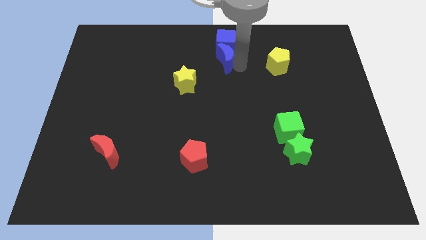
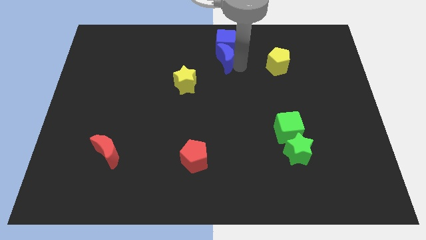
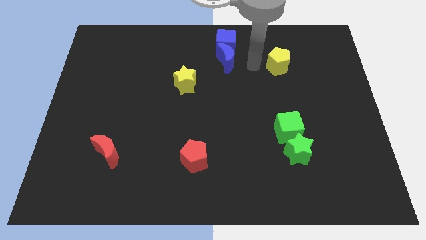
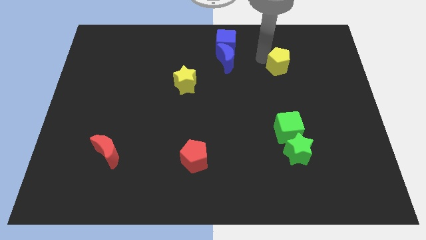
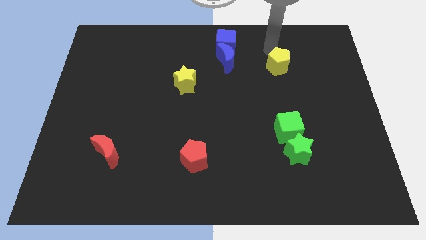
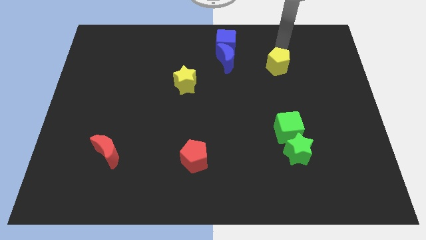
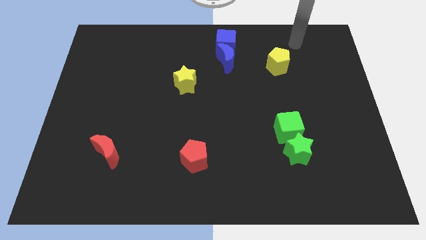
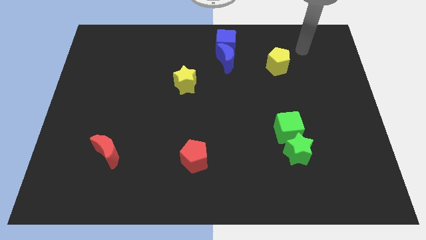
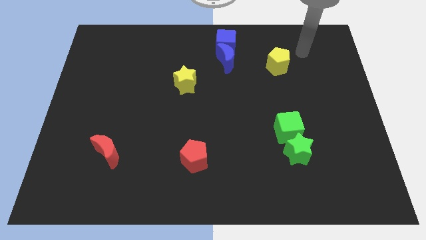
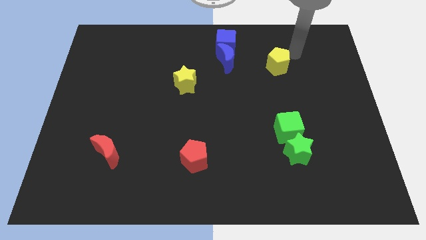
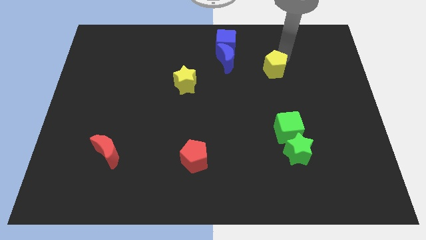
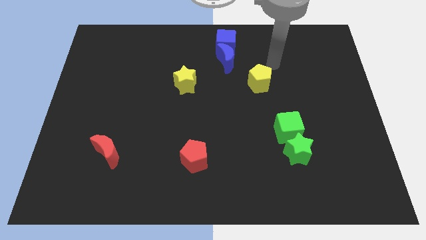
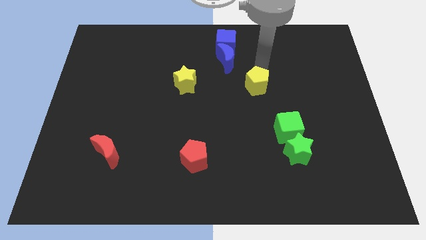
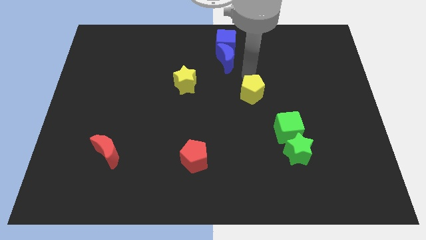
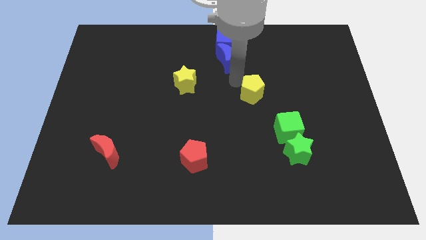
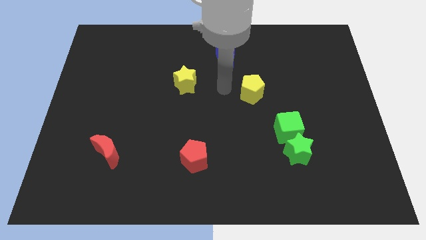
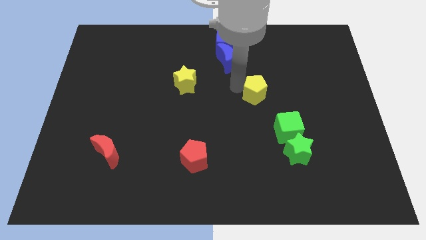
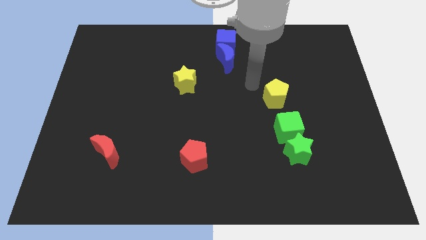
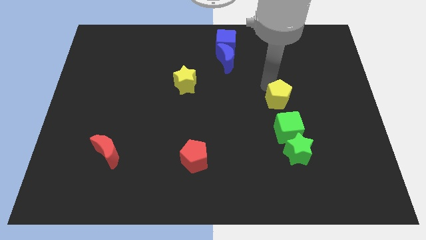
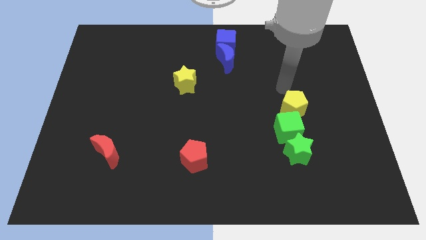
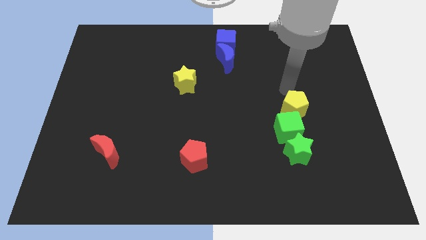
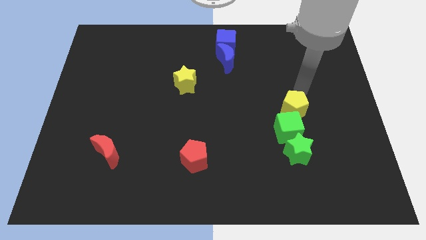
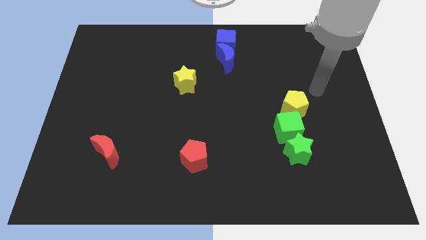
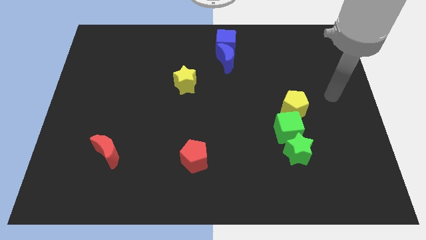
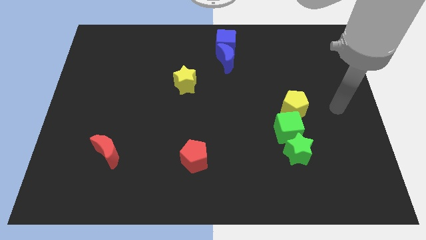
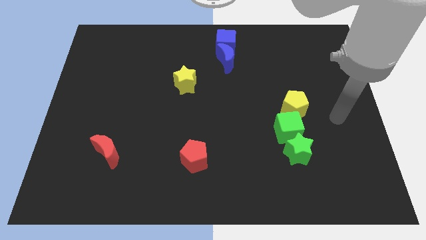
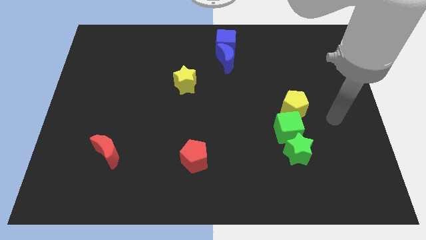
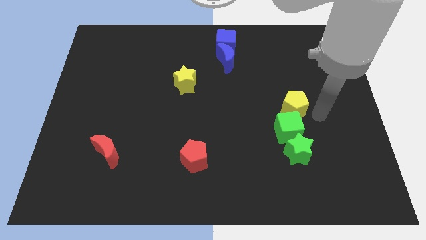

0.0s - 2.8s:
put the yellow pentagon at the top of the green cube

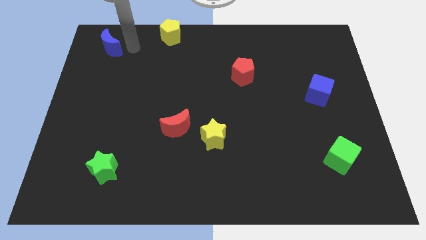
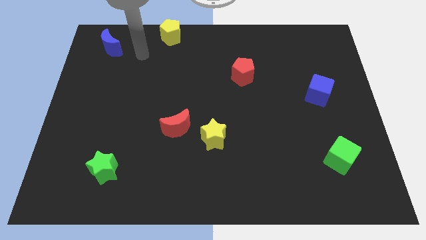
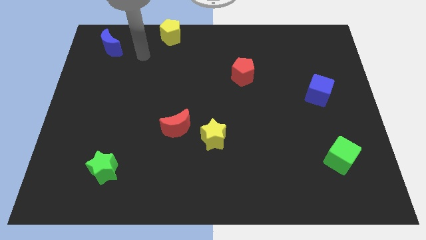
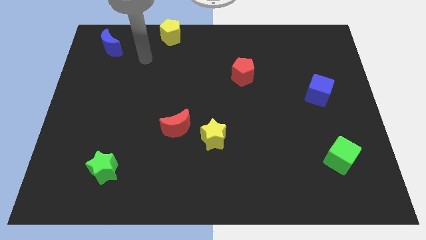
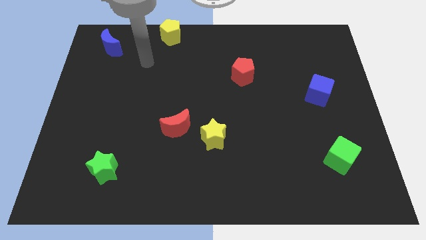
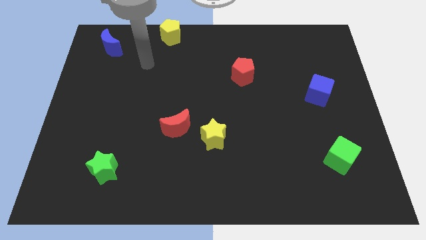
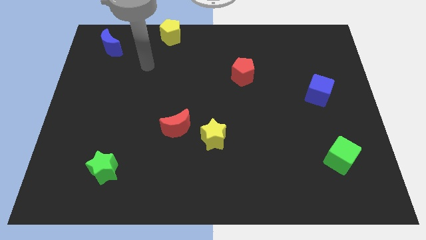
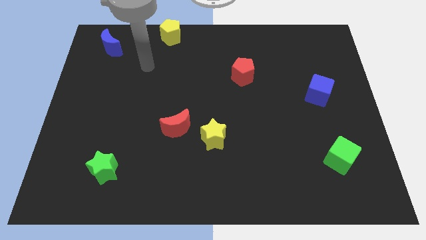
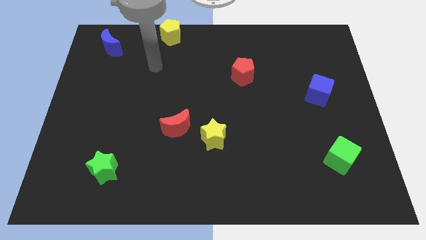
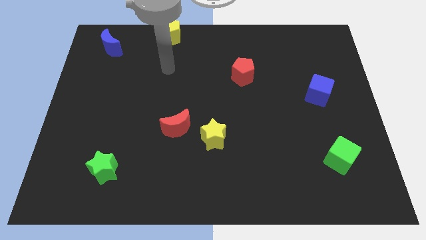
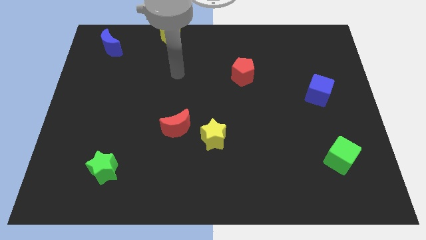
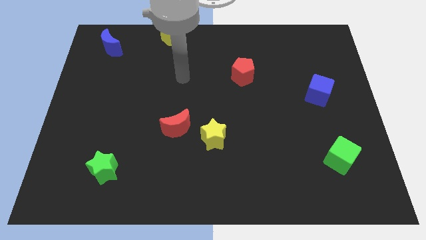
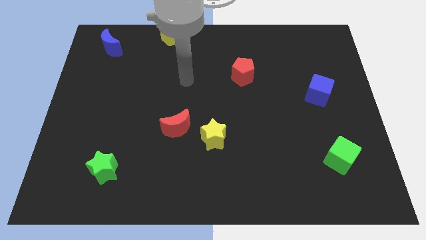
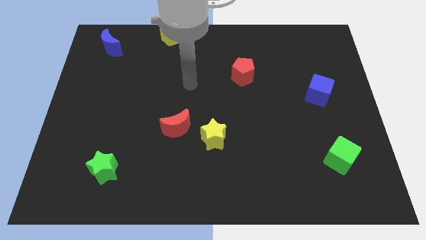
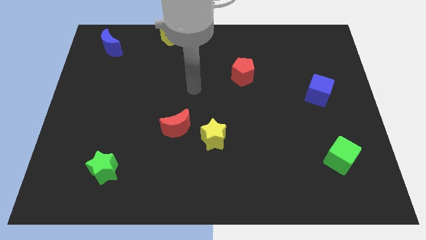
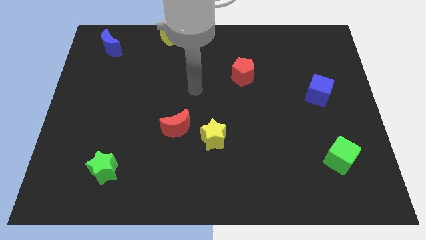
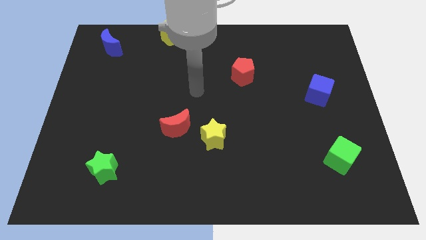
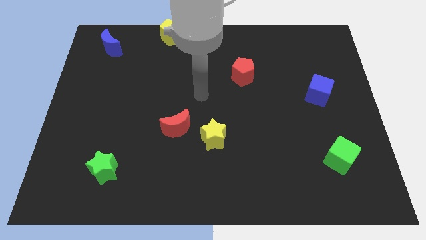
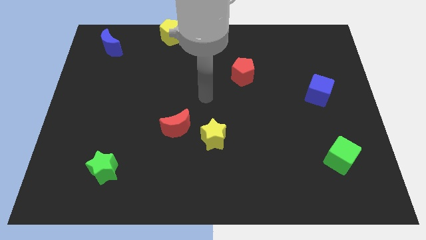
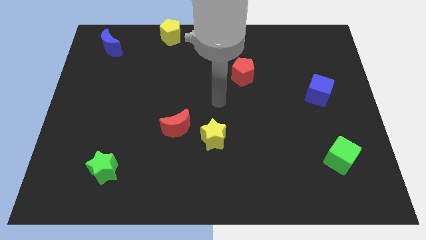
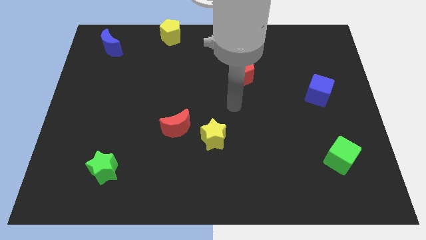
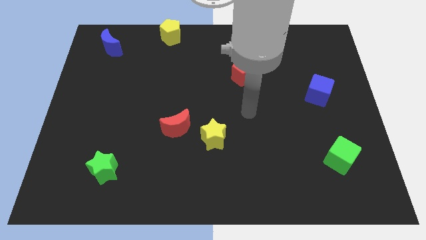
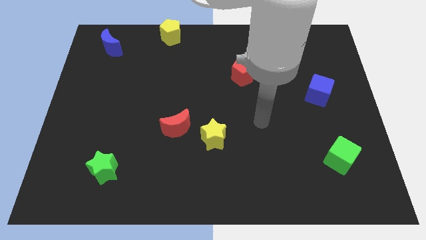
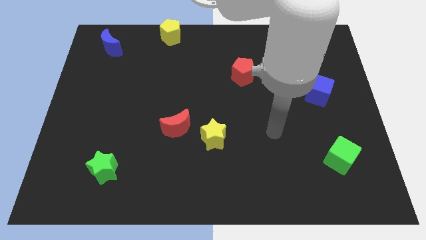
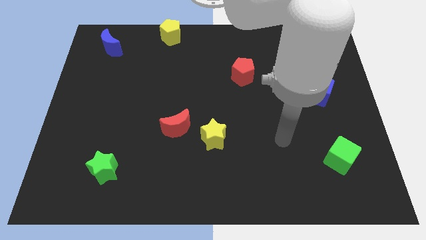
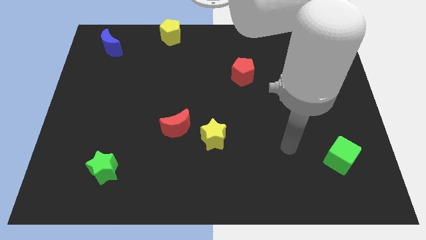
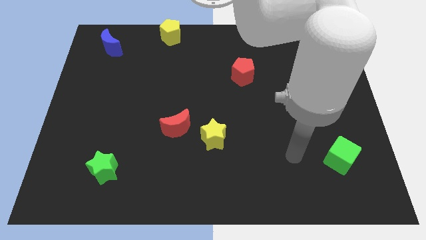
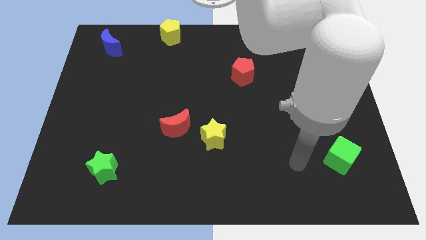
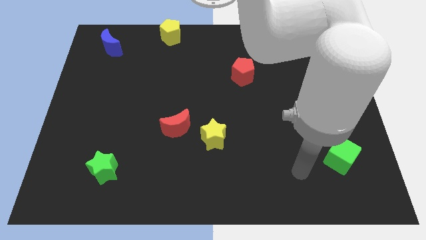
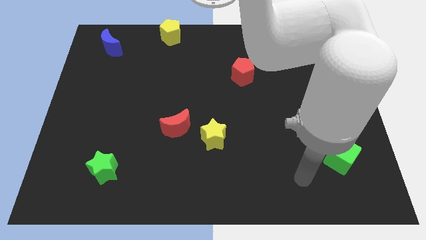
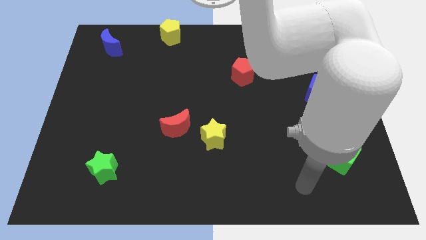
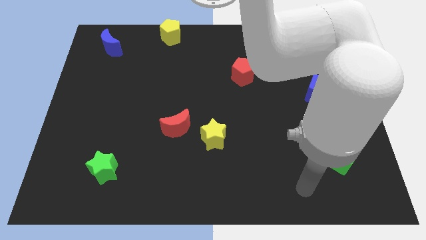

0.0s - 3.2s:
move the arm away from the blue moon

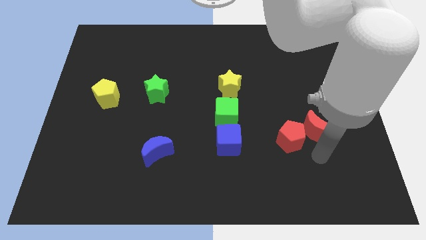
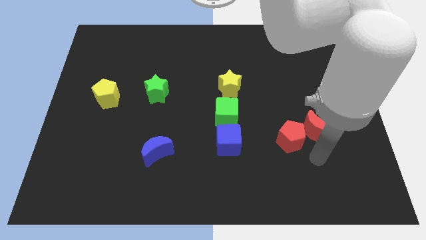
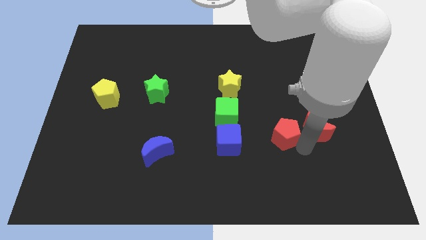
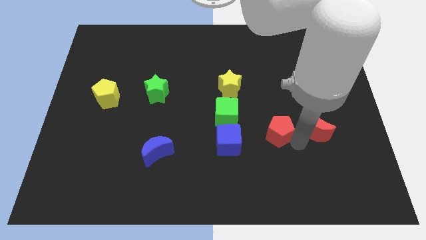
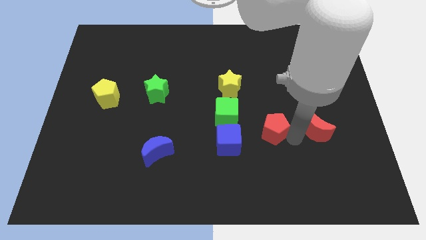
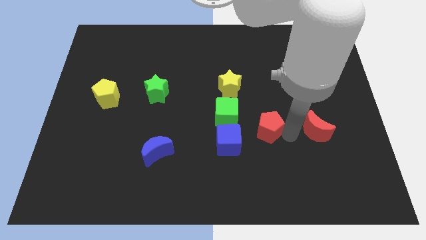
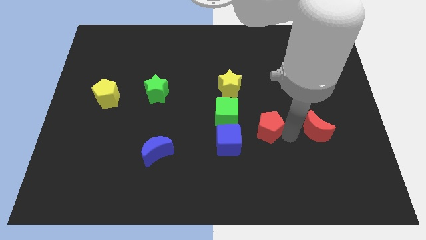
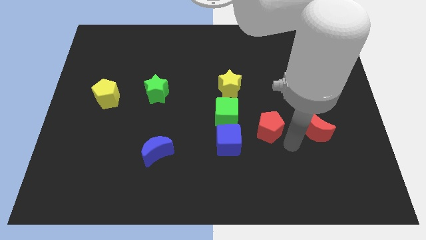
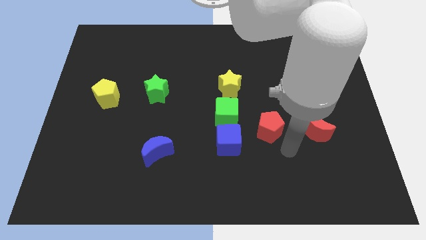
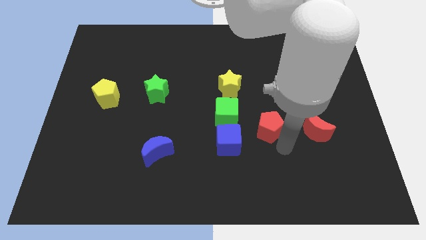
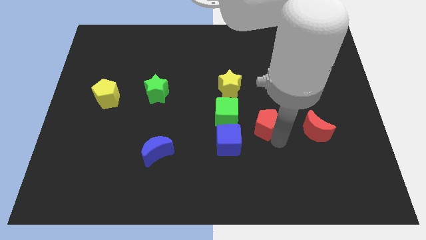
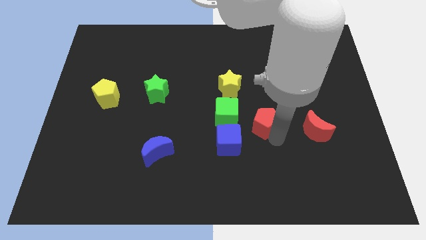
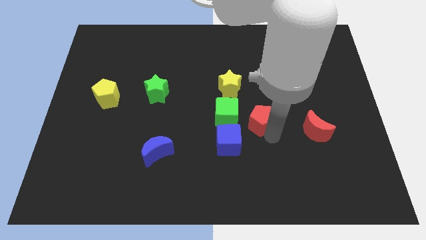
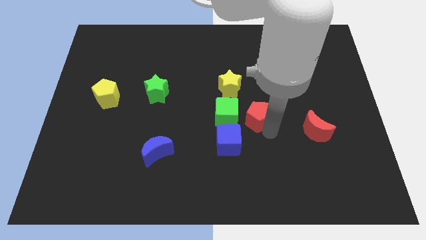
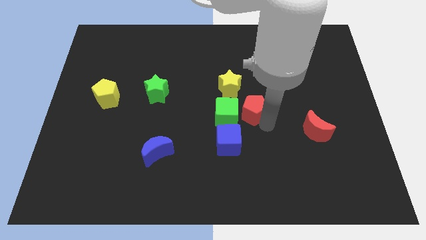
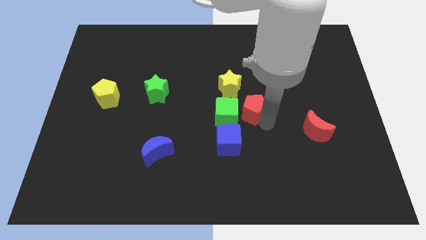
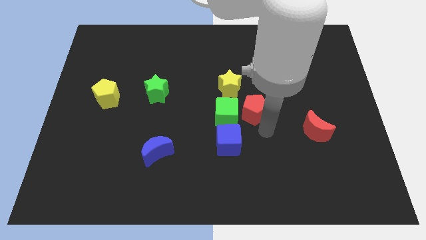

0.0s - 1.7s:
move red pentagon to the right of green cube

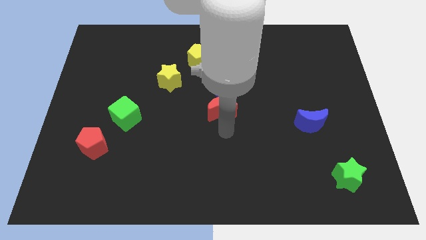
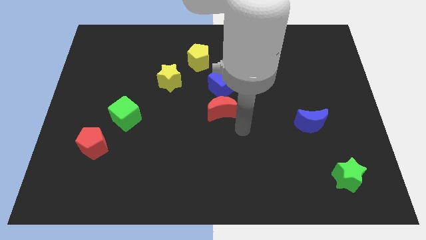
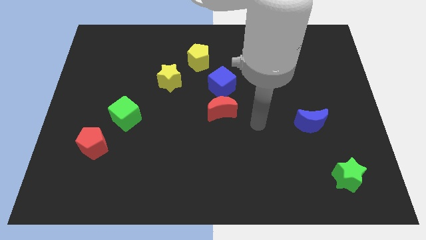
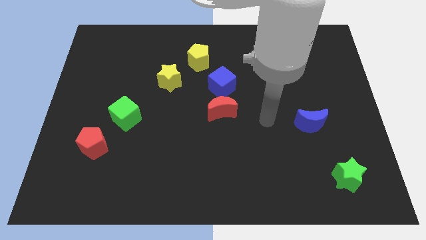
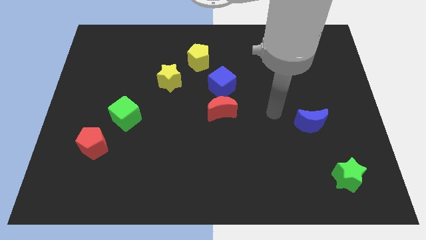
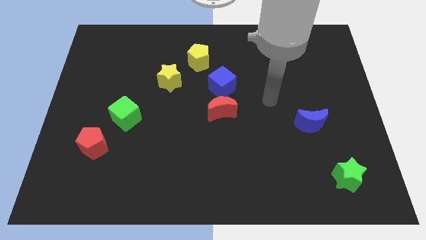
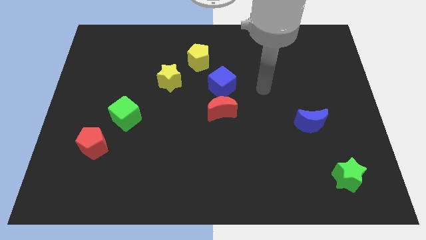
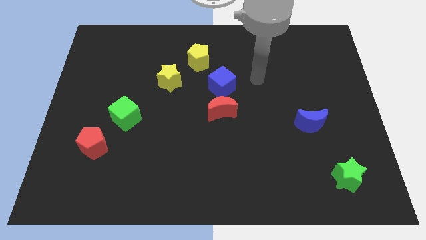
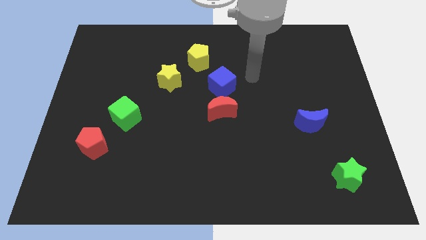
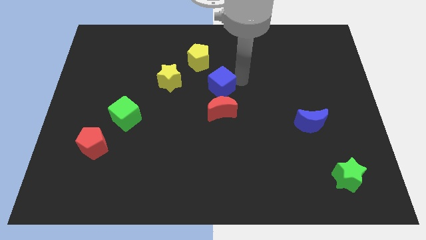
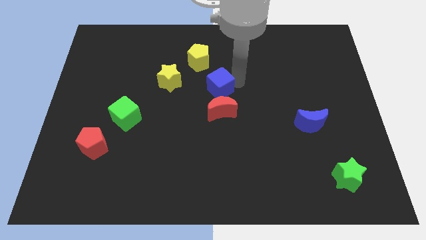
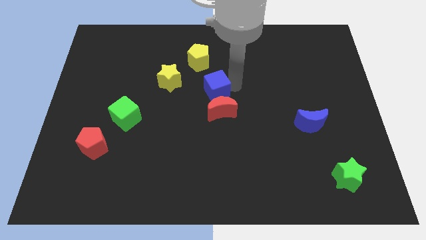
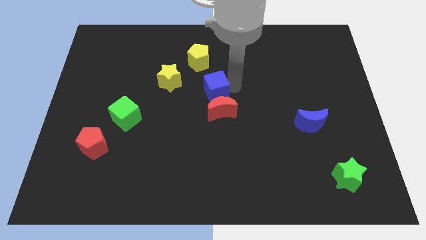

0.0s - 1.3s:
point your arm to the right side of blue cube

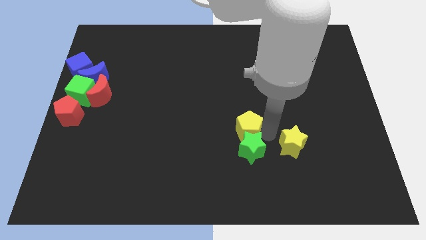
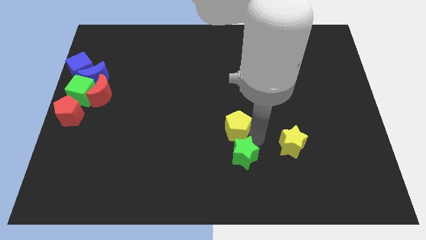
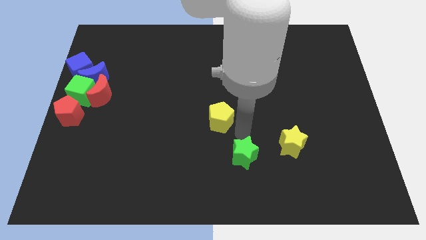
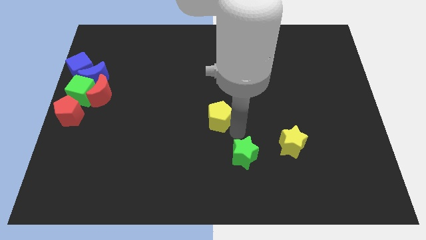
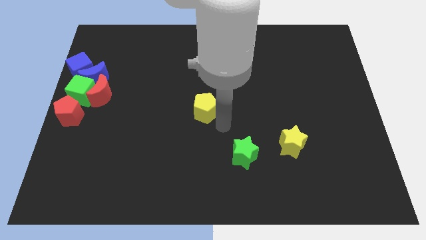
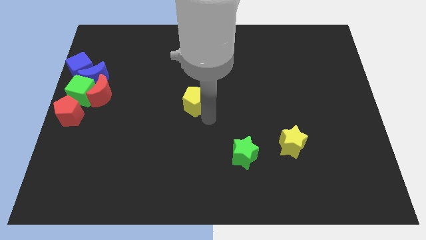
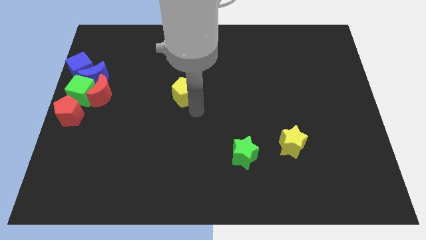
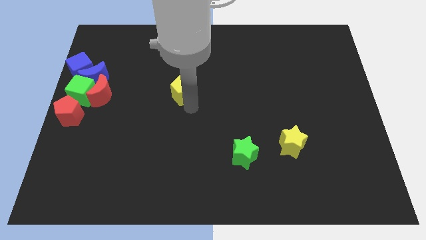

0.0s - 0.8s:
separate the yellow pentagon from the green star
